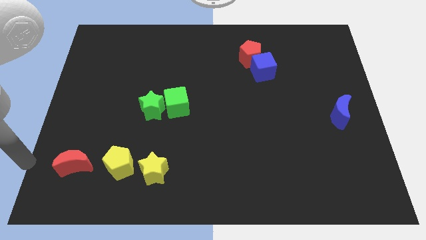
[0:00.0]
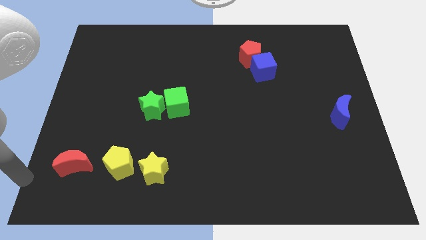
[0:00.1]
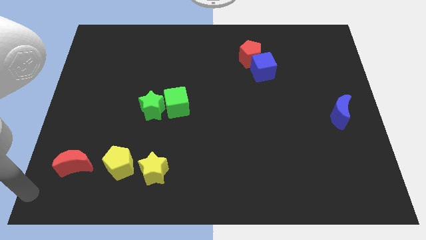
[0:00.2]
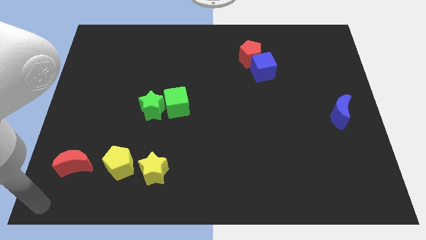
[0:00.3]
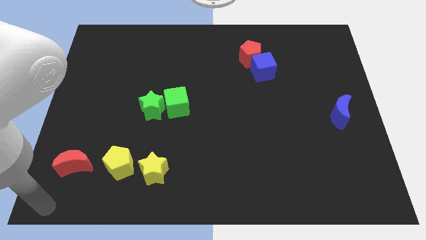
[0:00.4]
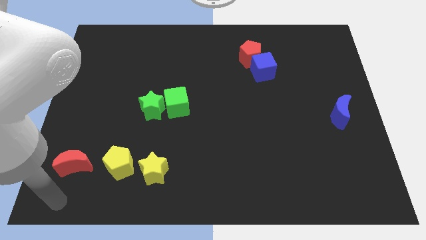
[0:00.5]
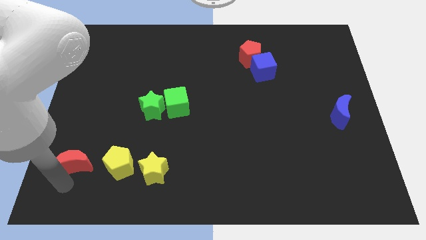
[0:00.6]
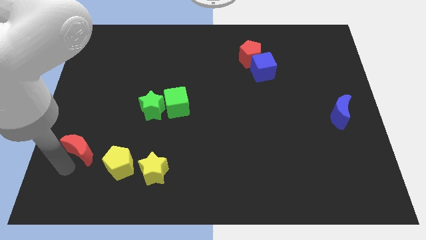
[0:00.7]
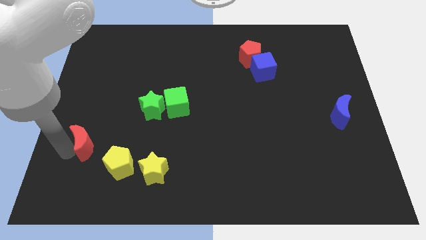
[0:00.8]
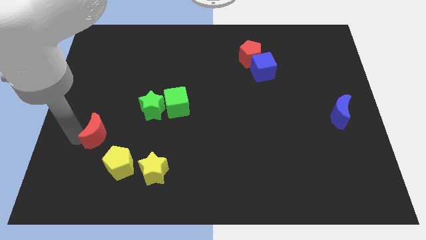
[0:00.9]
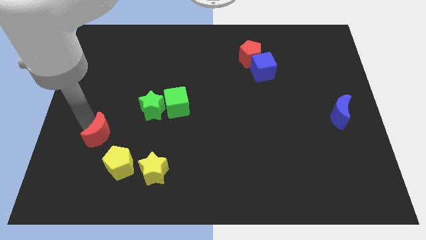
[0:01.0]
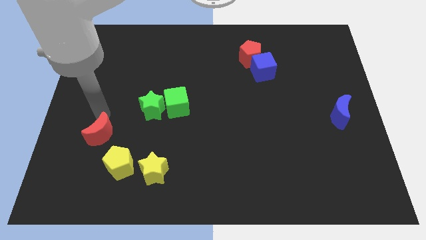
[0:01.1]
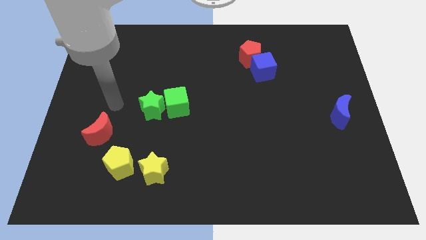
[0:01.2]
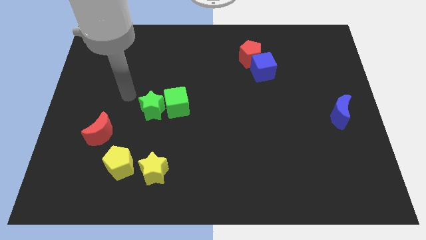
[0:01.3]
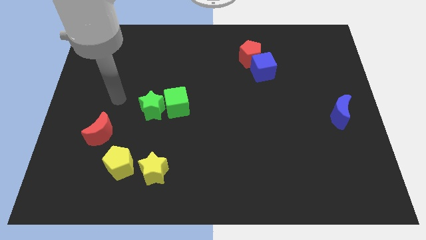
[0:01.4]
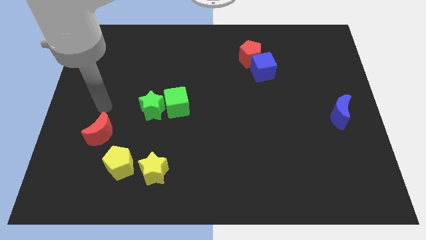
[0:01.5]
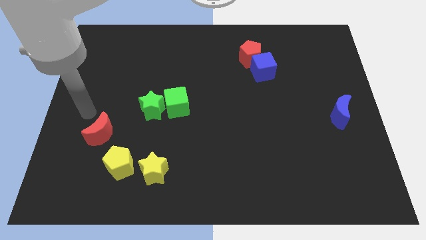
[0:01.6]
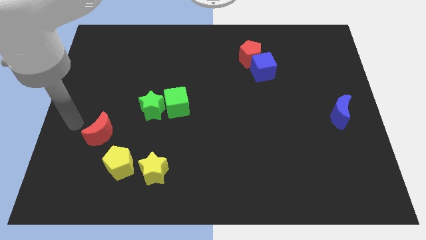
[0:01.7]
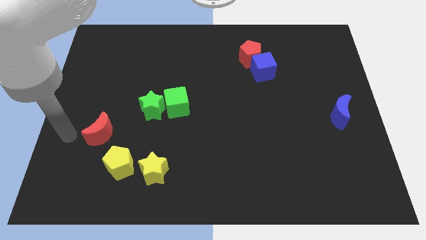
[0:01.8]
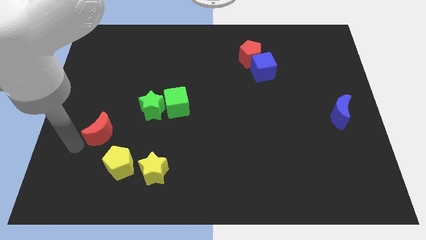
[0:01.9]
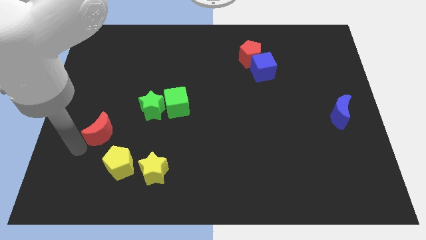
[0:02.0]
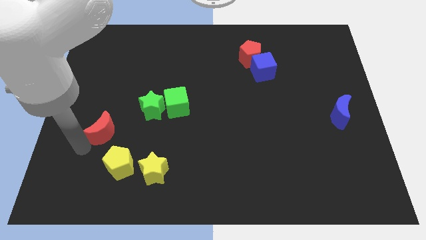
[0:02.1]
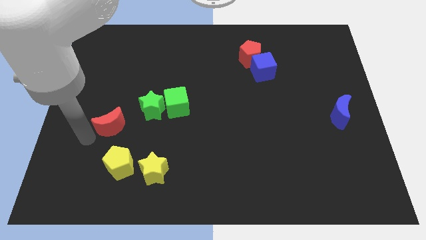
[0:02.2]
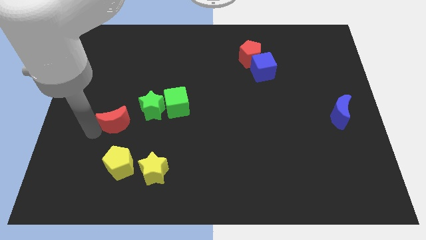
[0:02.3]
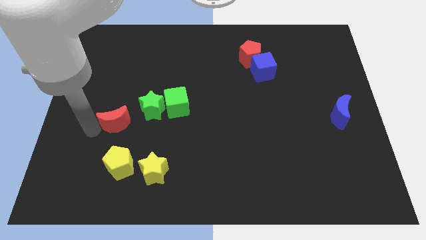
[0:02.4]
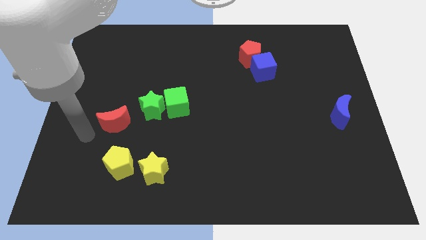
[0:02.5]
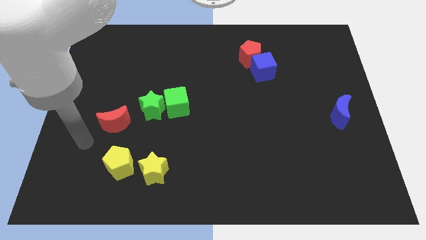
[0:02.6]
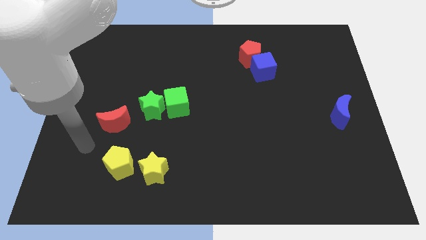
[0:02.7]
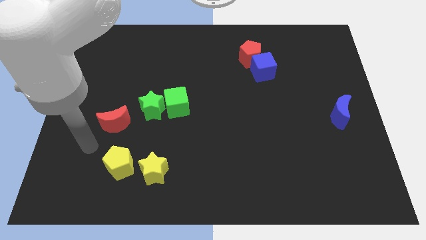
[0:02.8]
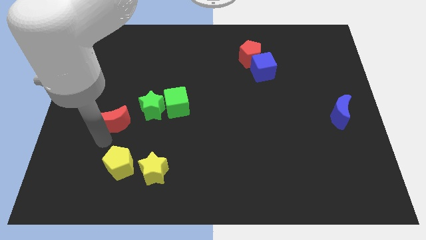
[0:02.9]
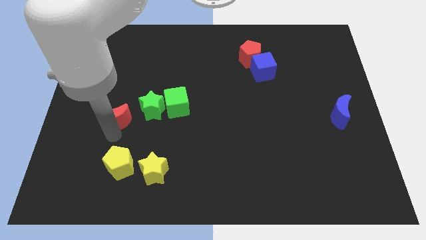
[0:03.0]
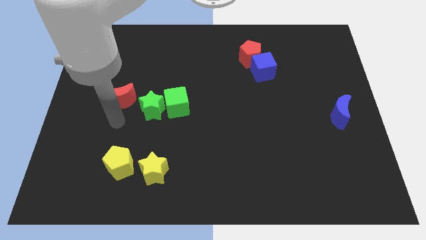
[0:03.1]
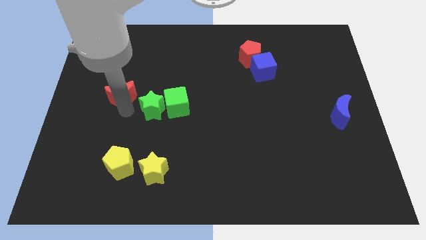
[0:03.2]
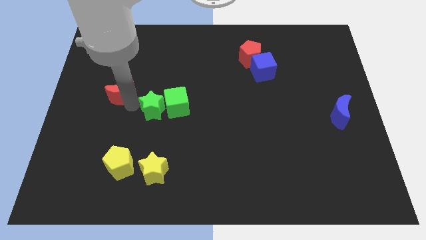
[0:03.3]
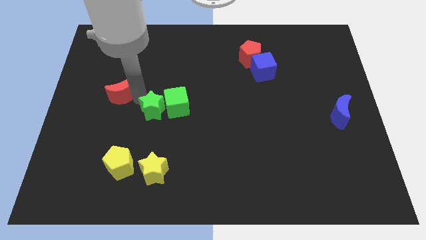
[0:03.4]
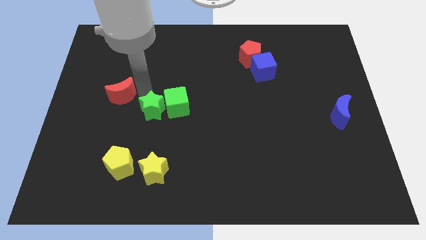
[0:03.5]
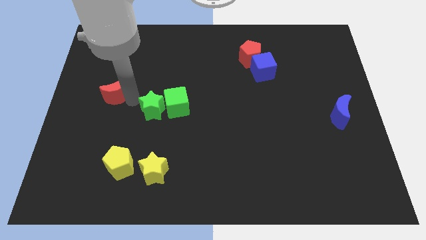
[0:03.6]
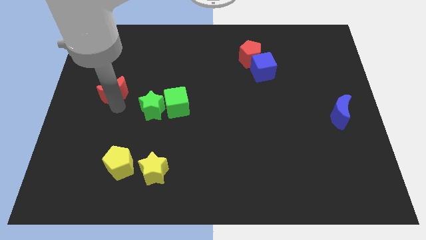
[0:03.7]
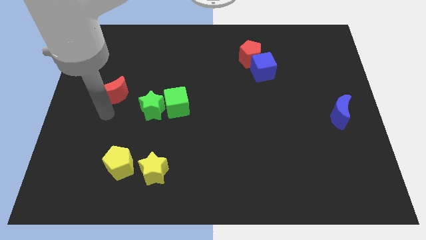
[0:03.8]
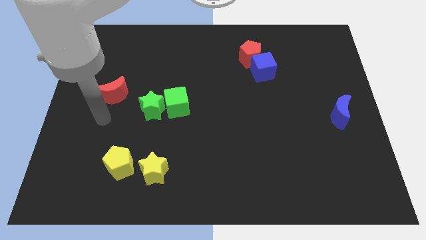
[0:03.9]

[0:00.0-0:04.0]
push red moon upwards

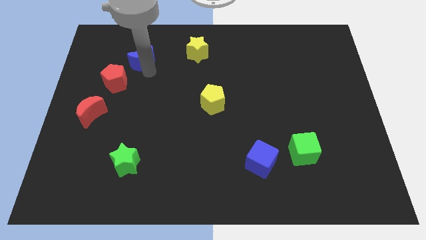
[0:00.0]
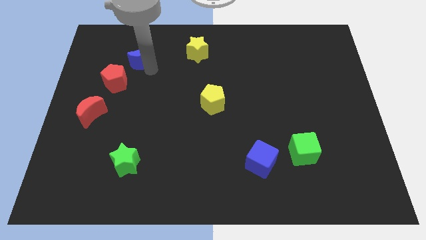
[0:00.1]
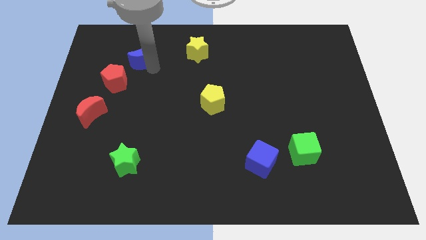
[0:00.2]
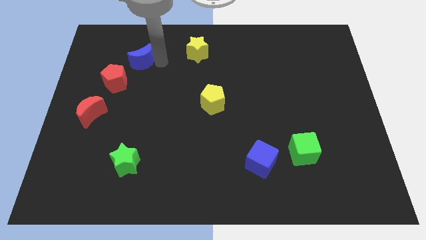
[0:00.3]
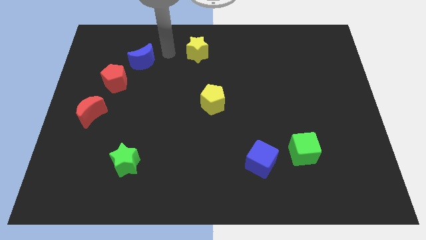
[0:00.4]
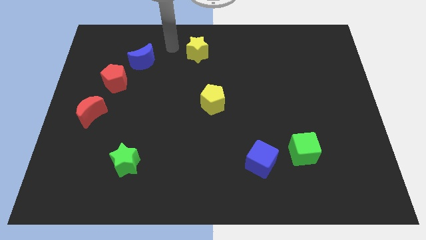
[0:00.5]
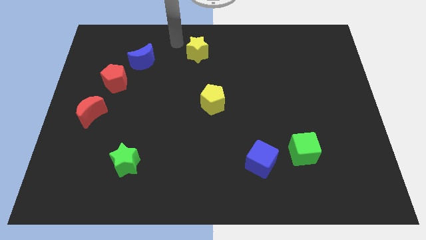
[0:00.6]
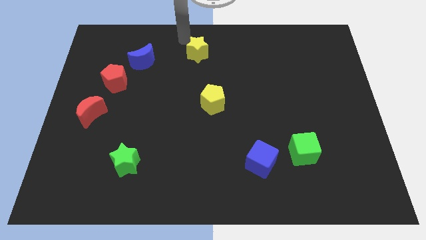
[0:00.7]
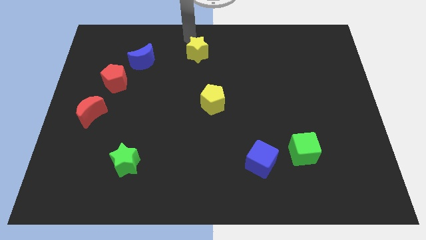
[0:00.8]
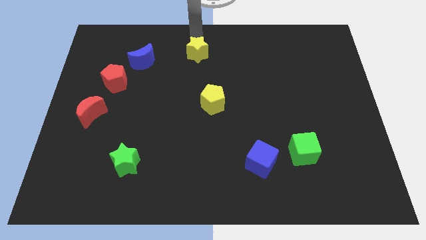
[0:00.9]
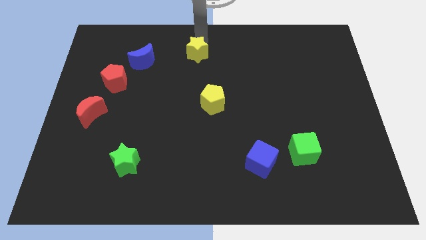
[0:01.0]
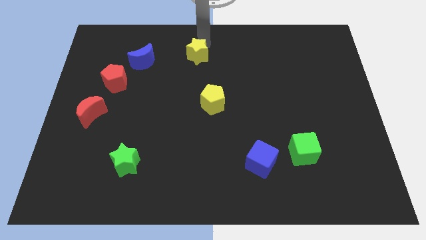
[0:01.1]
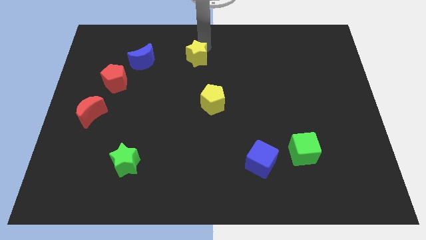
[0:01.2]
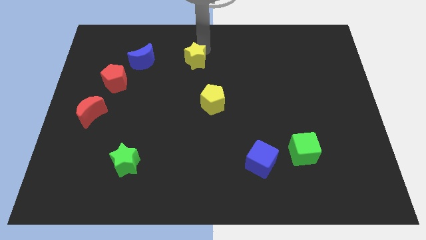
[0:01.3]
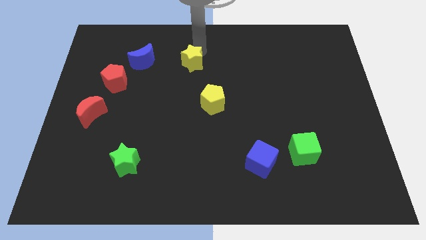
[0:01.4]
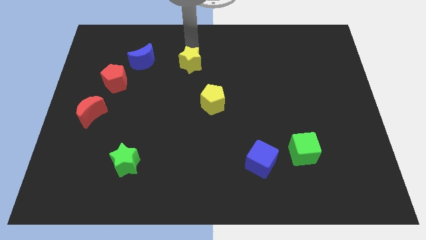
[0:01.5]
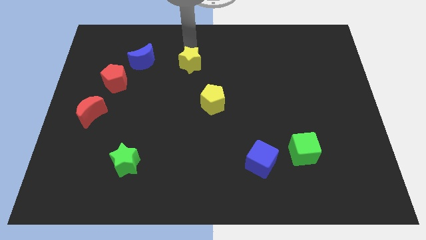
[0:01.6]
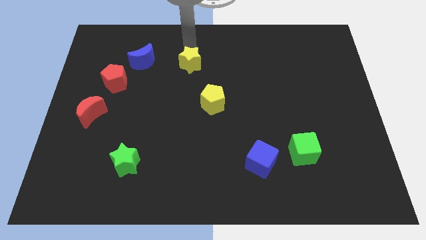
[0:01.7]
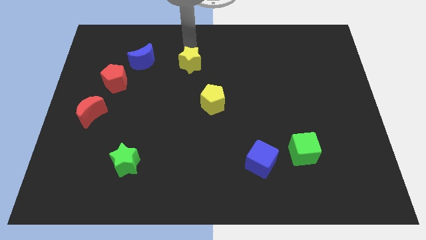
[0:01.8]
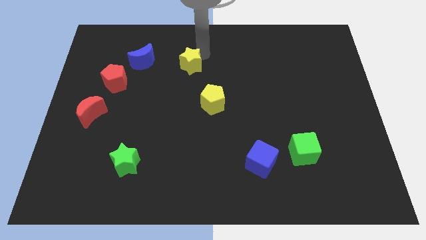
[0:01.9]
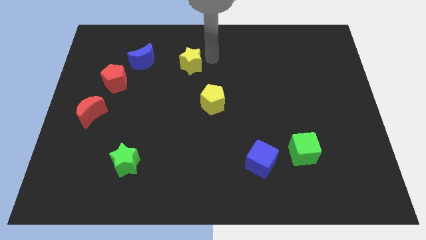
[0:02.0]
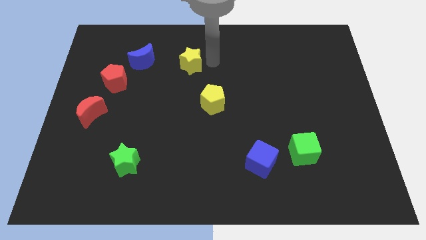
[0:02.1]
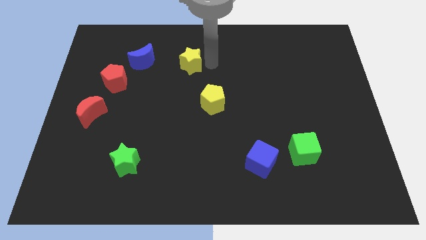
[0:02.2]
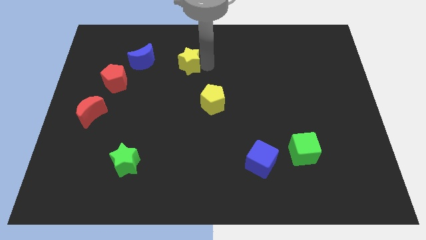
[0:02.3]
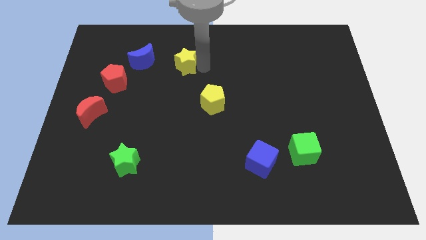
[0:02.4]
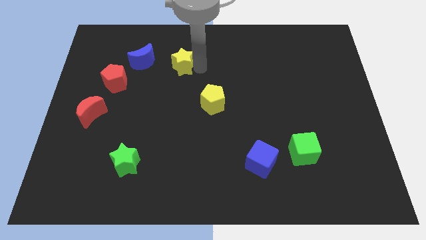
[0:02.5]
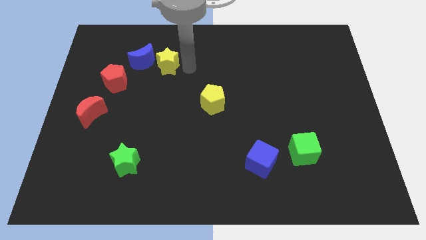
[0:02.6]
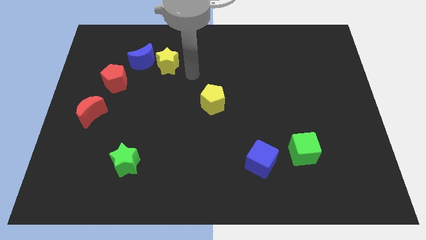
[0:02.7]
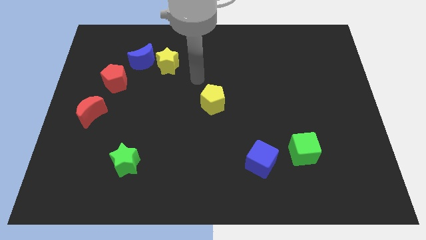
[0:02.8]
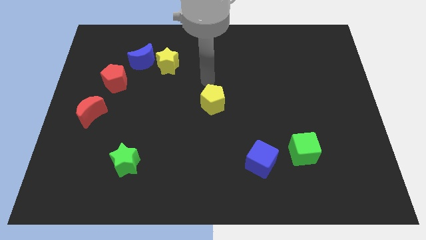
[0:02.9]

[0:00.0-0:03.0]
place the yellow star to the right side of blue moon

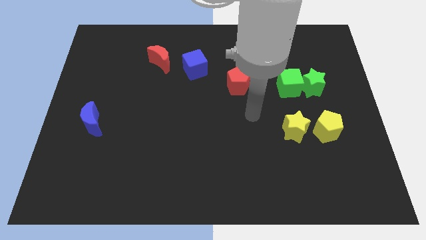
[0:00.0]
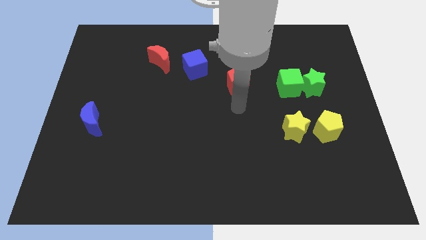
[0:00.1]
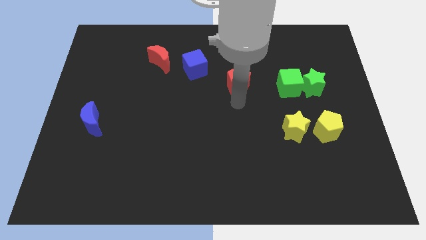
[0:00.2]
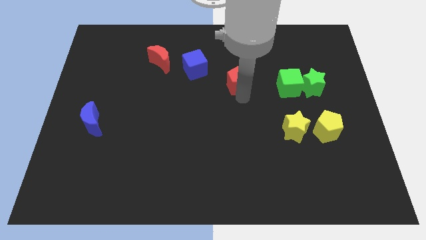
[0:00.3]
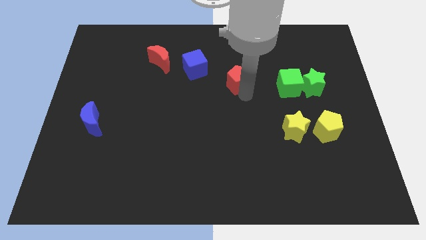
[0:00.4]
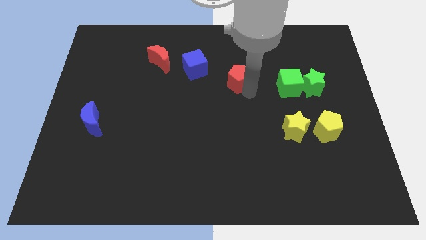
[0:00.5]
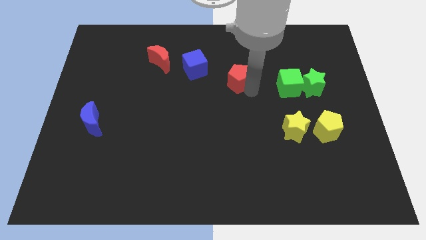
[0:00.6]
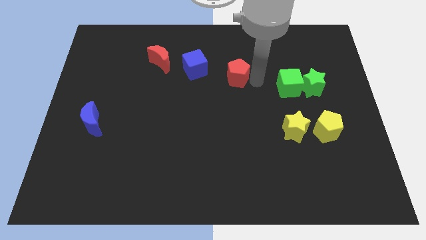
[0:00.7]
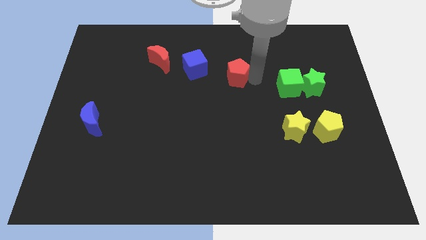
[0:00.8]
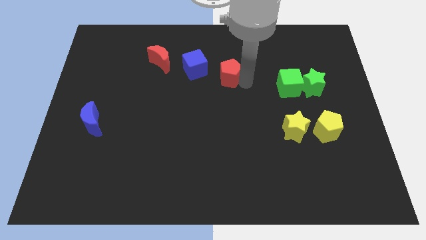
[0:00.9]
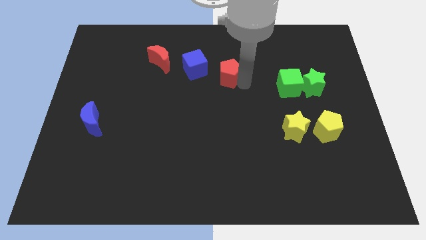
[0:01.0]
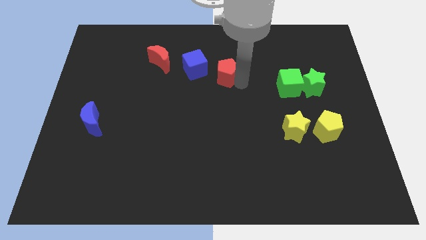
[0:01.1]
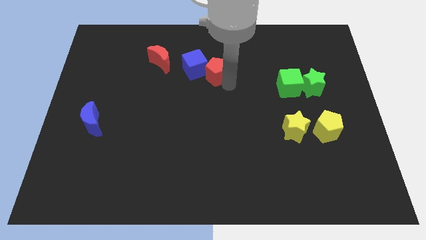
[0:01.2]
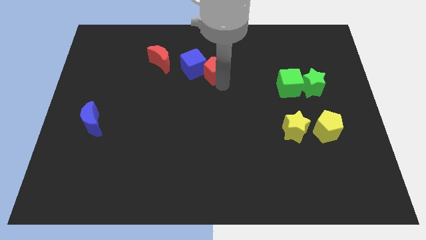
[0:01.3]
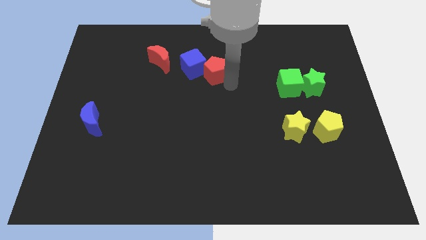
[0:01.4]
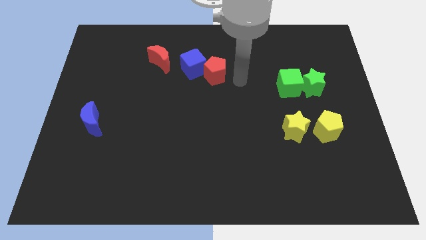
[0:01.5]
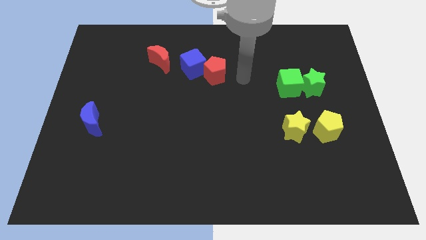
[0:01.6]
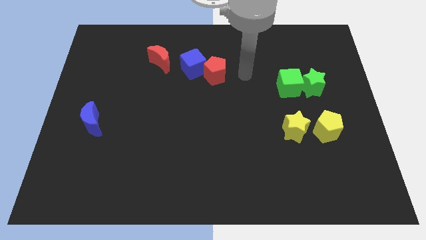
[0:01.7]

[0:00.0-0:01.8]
push the red pentagon into blue cube

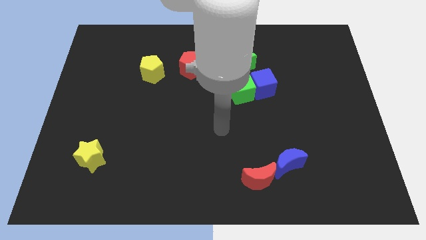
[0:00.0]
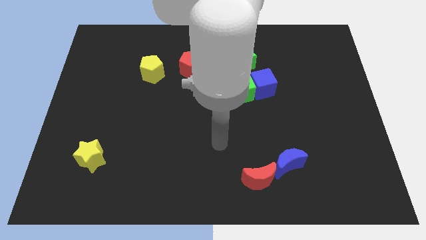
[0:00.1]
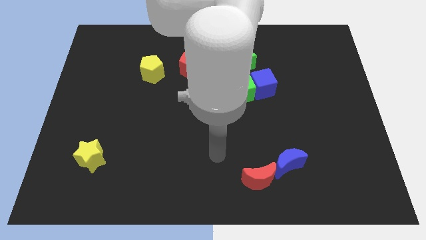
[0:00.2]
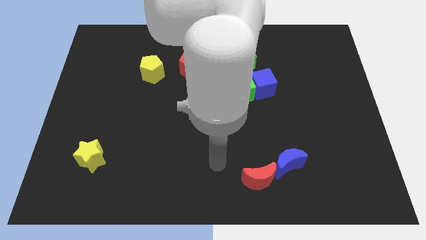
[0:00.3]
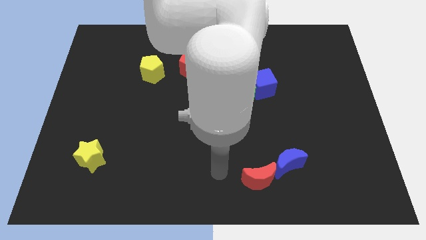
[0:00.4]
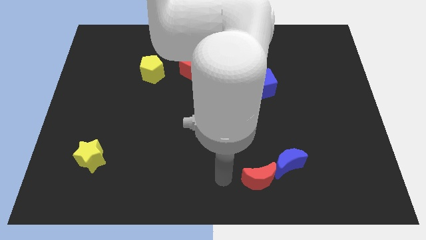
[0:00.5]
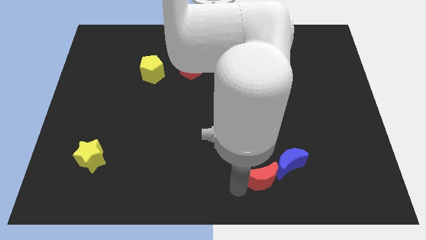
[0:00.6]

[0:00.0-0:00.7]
touch the red moon
